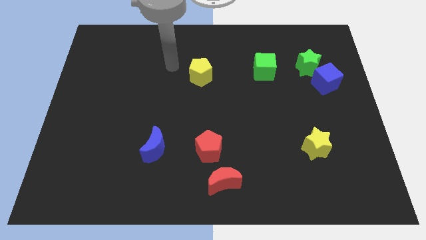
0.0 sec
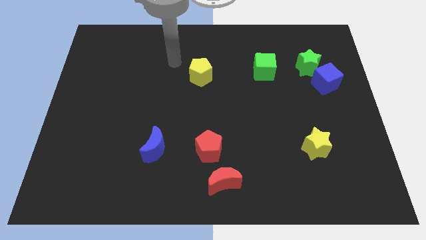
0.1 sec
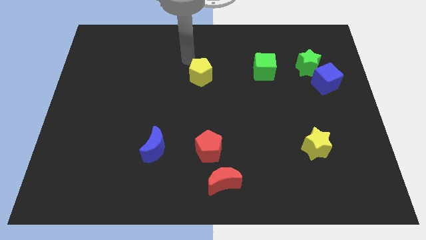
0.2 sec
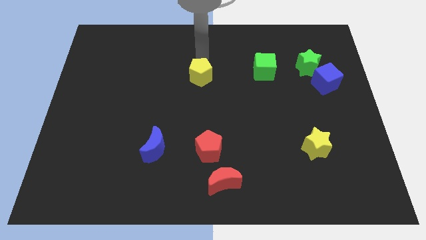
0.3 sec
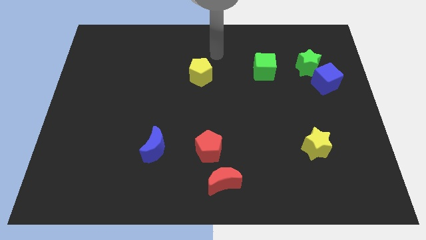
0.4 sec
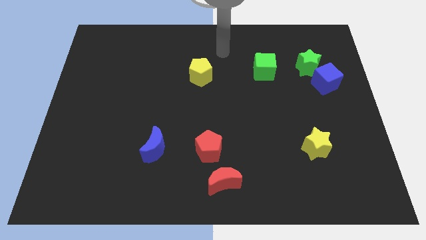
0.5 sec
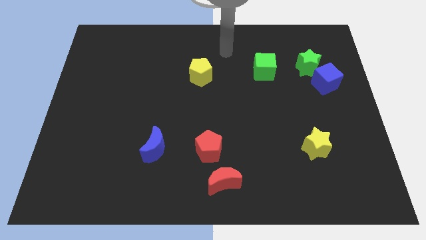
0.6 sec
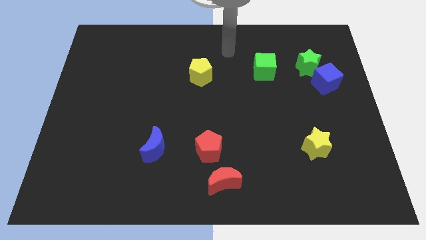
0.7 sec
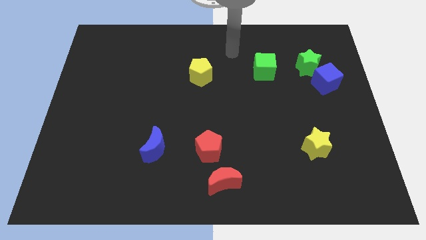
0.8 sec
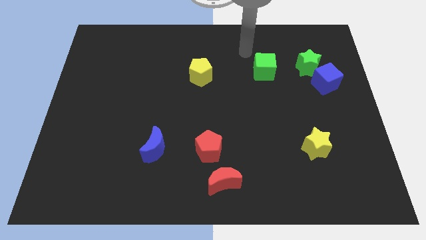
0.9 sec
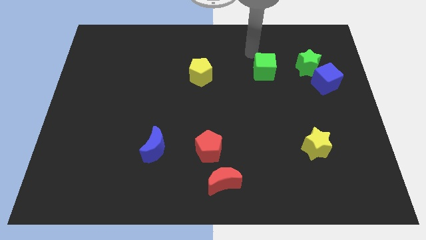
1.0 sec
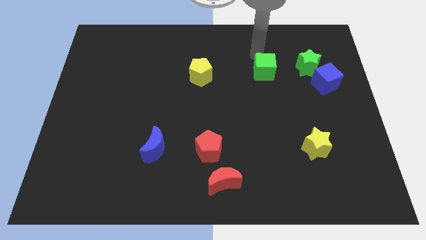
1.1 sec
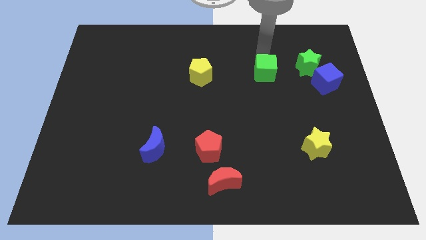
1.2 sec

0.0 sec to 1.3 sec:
point your hand at the top left side of the green cube

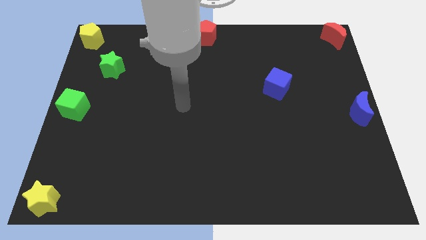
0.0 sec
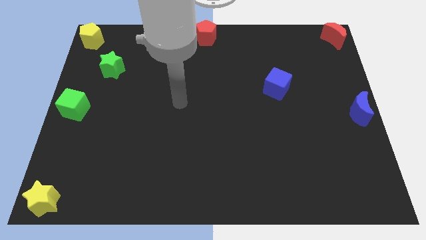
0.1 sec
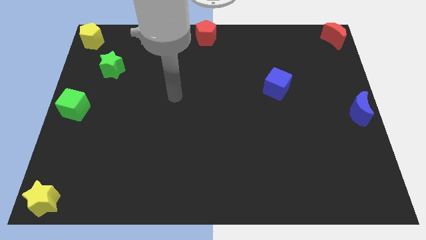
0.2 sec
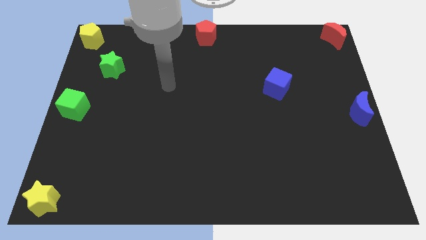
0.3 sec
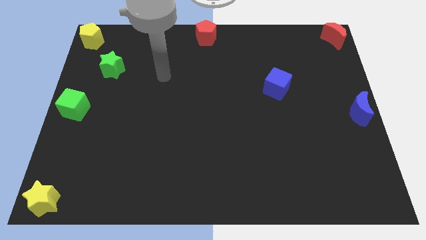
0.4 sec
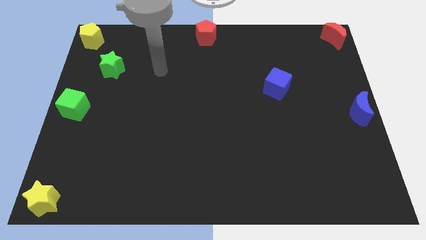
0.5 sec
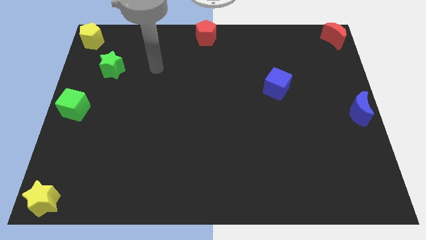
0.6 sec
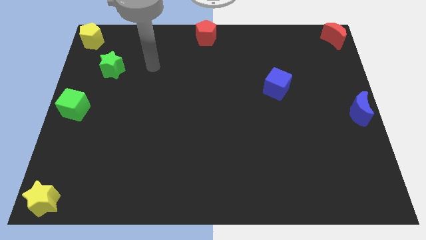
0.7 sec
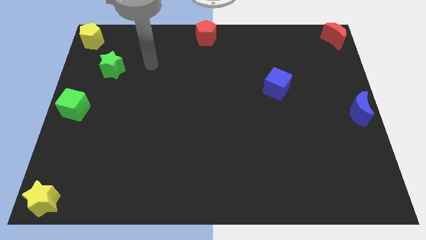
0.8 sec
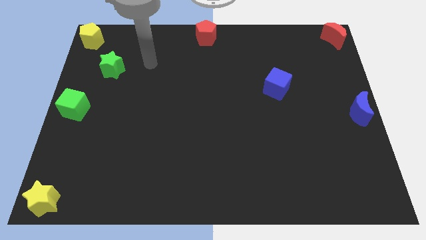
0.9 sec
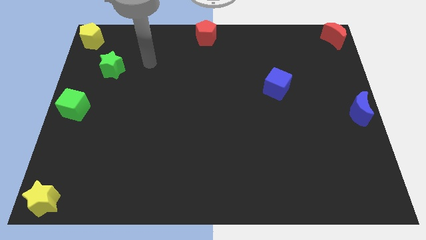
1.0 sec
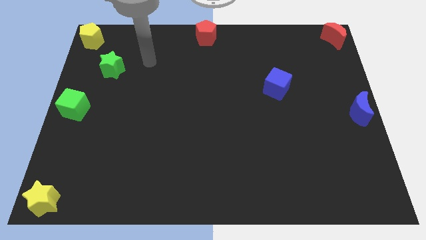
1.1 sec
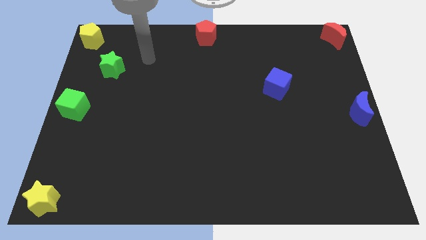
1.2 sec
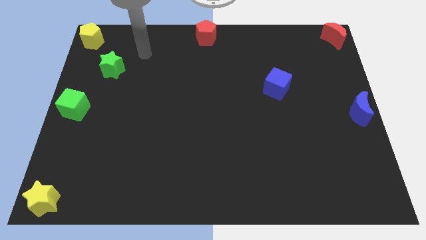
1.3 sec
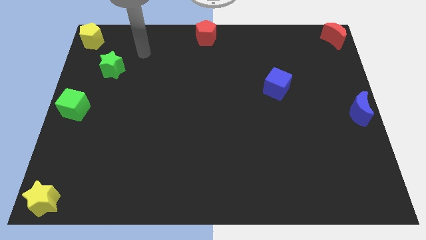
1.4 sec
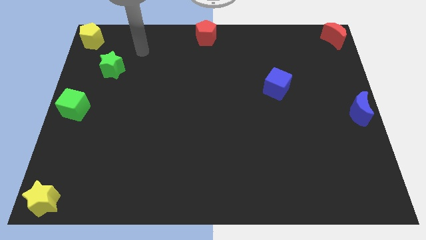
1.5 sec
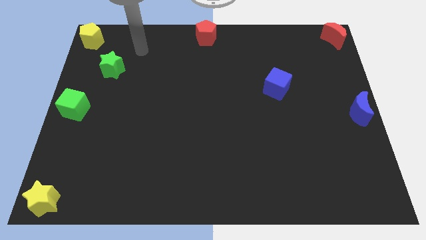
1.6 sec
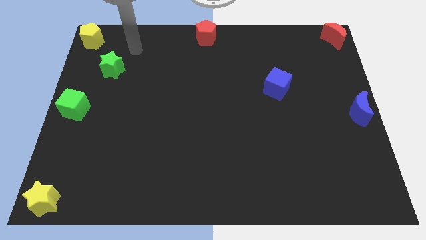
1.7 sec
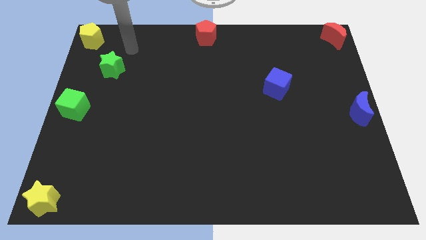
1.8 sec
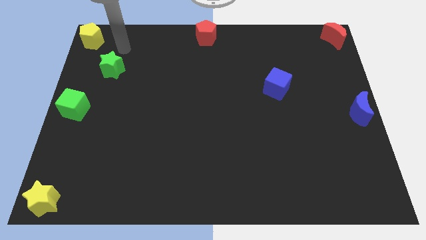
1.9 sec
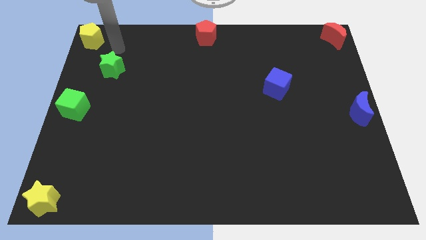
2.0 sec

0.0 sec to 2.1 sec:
move the arm towards the top of the green star

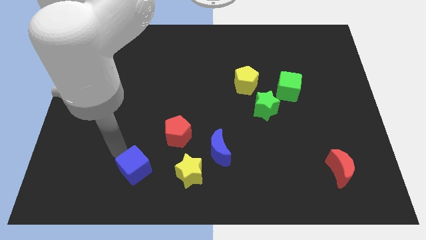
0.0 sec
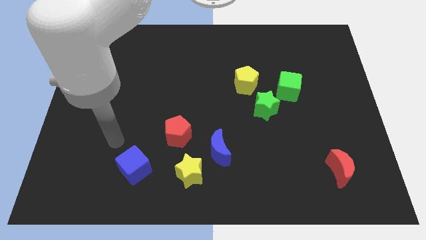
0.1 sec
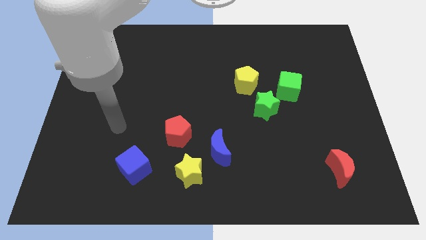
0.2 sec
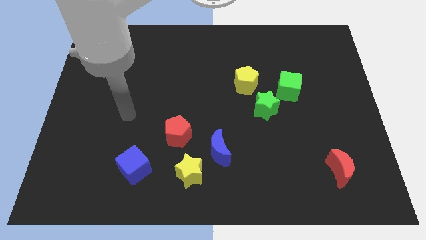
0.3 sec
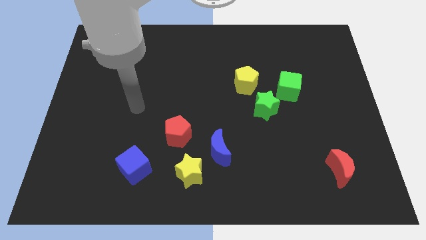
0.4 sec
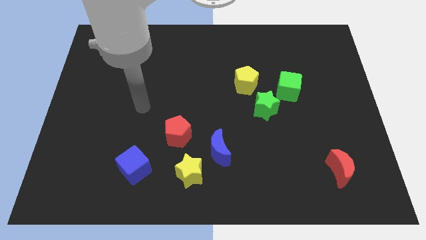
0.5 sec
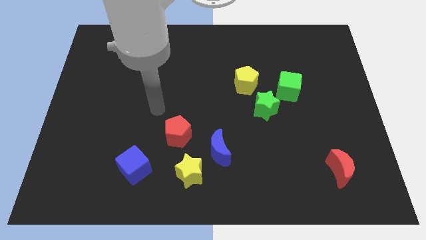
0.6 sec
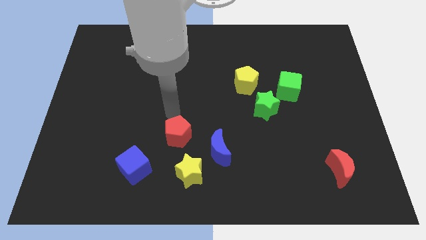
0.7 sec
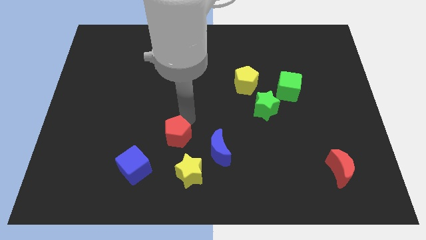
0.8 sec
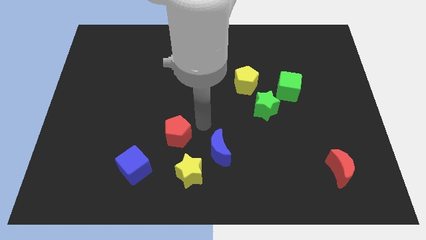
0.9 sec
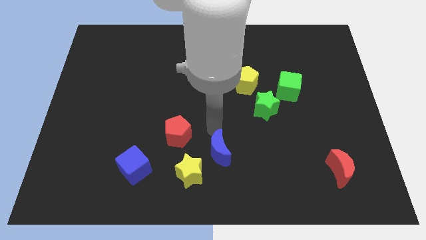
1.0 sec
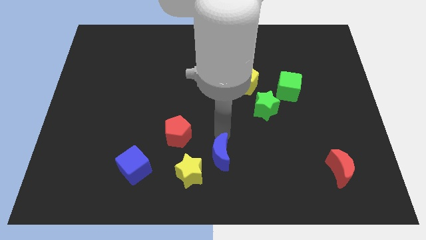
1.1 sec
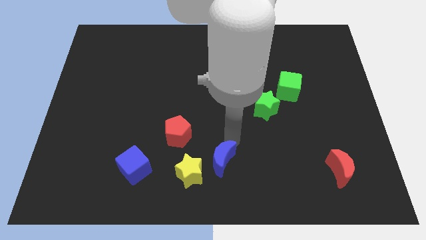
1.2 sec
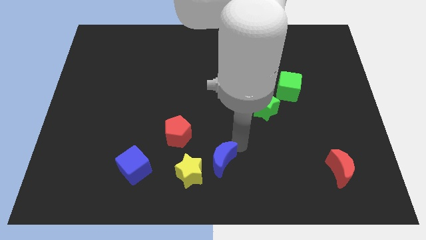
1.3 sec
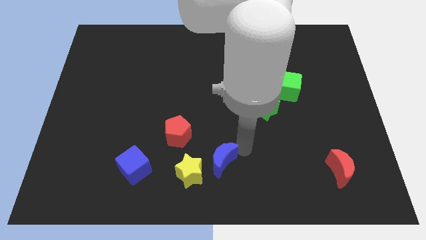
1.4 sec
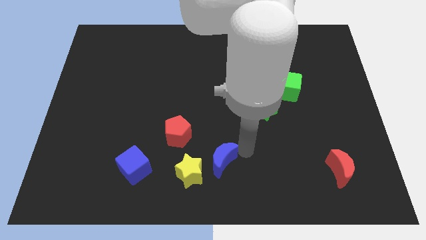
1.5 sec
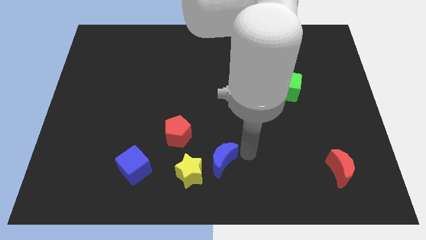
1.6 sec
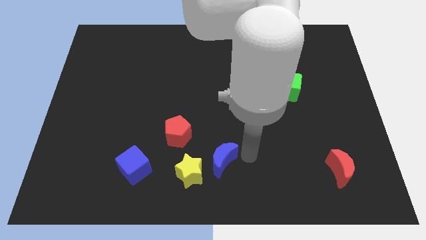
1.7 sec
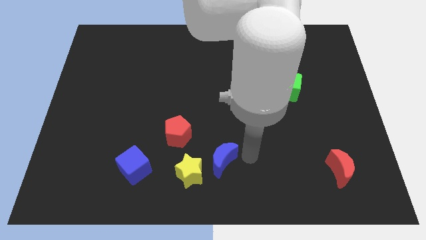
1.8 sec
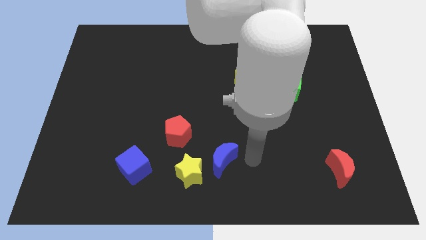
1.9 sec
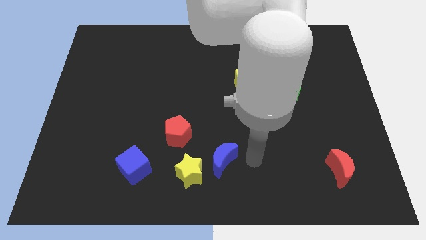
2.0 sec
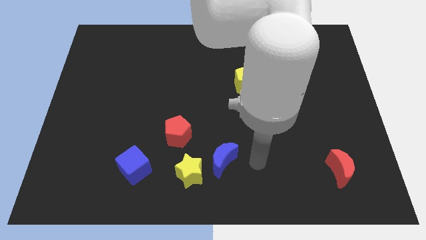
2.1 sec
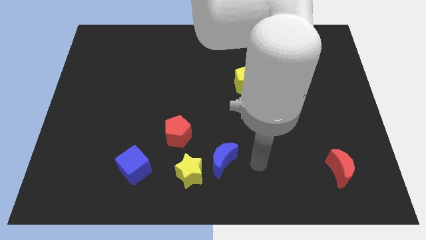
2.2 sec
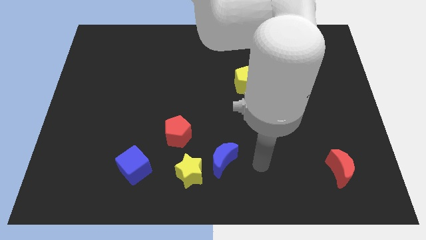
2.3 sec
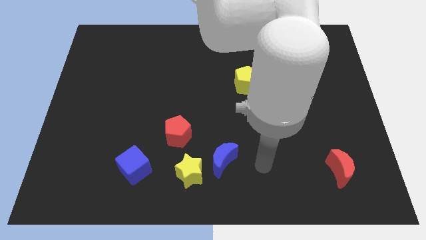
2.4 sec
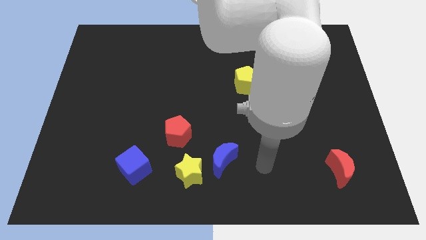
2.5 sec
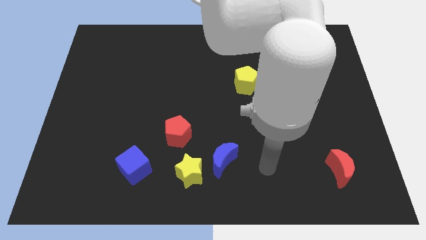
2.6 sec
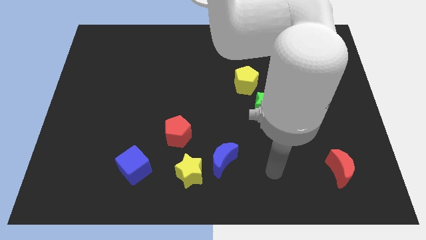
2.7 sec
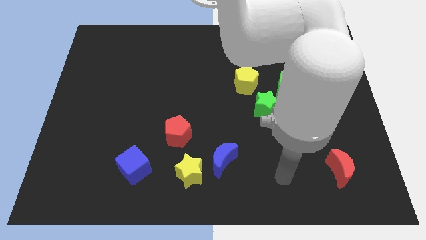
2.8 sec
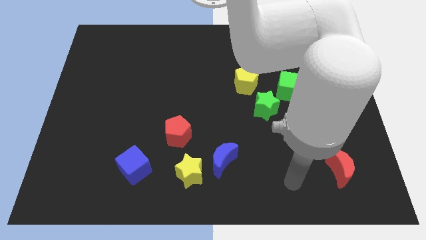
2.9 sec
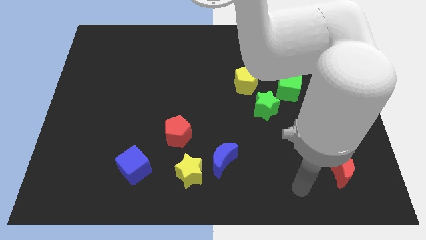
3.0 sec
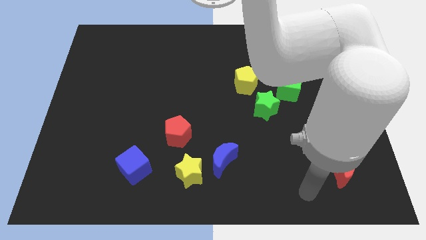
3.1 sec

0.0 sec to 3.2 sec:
slightly push the blue moon towards the bottom center of the board

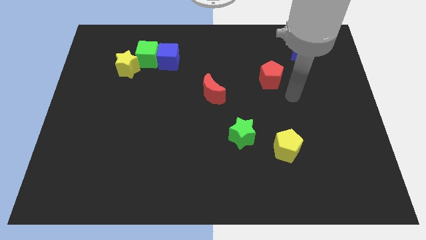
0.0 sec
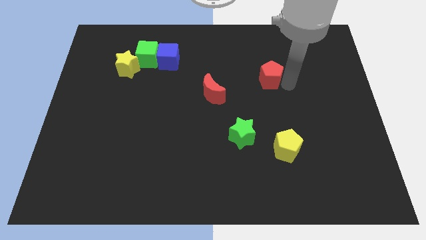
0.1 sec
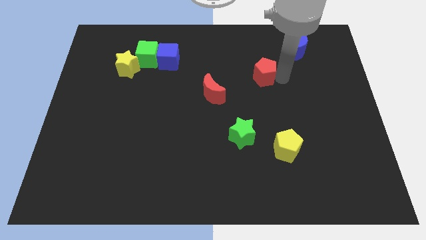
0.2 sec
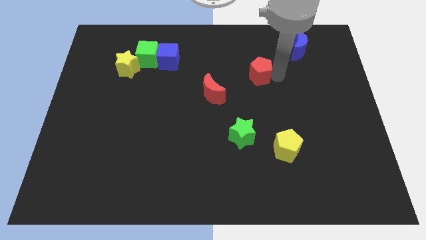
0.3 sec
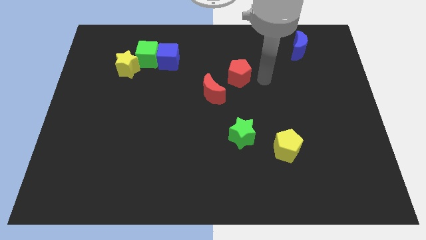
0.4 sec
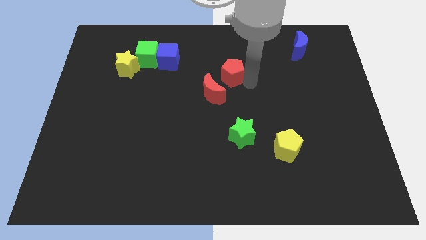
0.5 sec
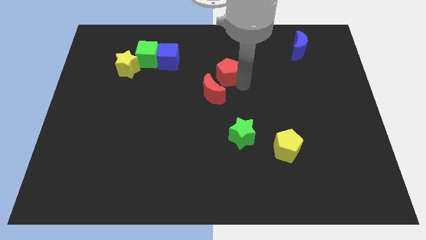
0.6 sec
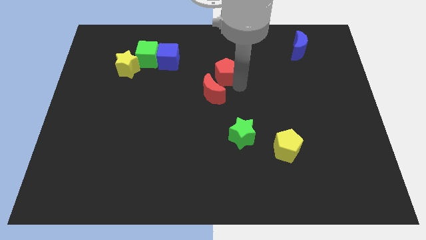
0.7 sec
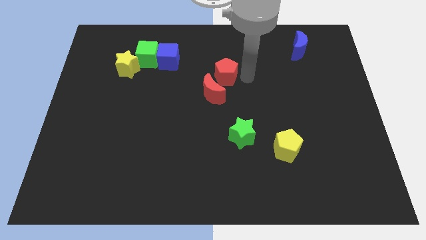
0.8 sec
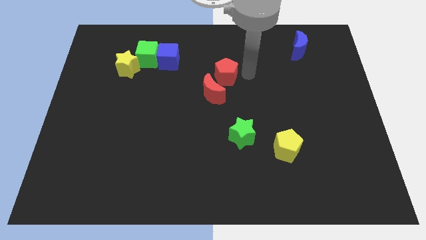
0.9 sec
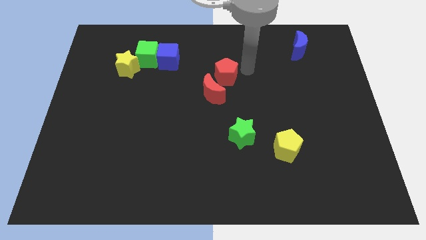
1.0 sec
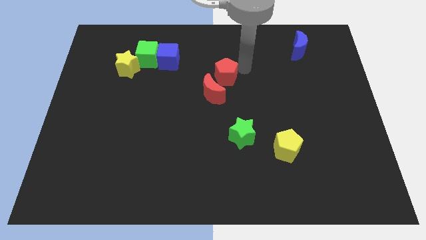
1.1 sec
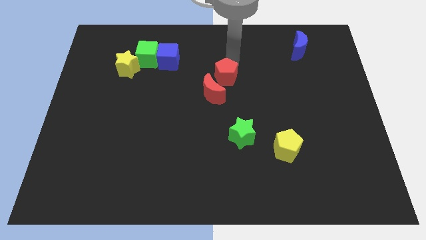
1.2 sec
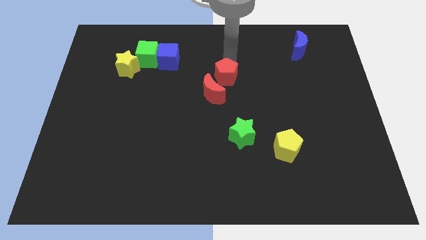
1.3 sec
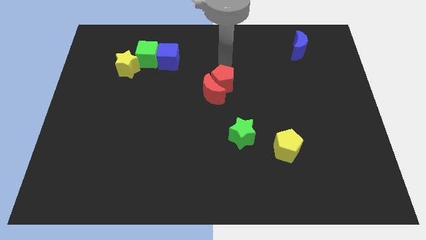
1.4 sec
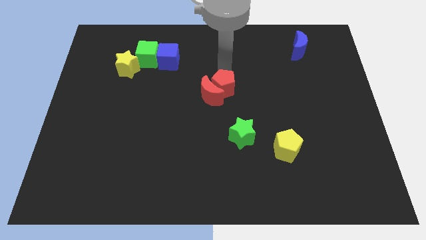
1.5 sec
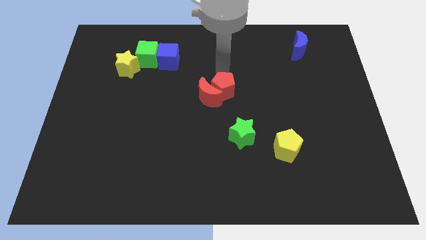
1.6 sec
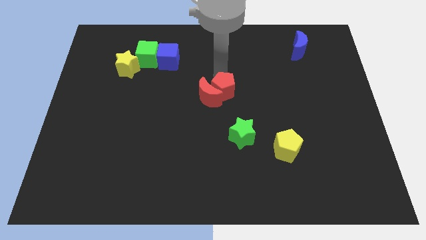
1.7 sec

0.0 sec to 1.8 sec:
move red pentagon into red moon

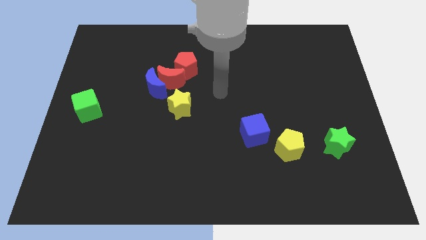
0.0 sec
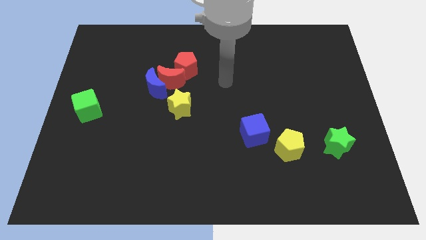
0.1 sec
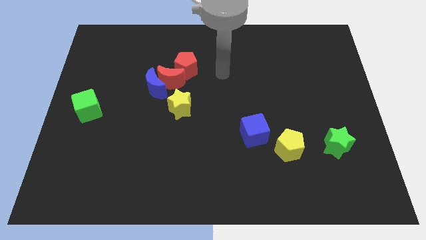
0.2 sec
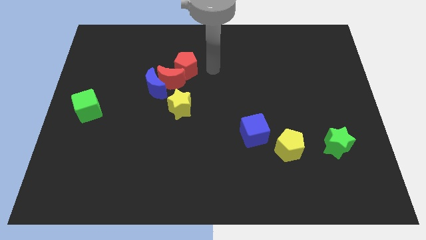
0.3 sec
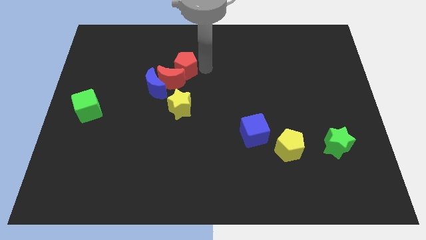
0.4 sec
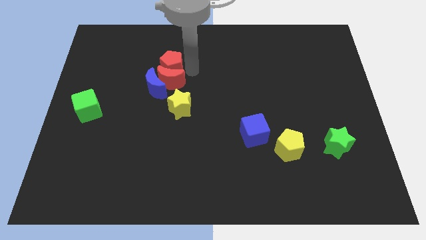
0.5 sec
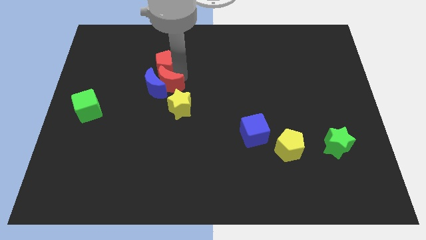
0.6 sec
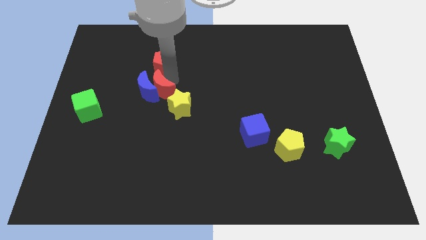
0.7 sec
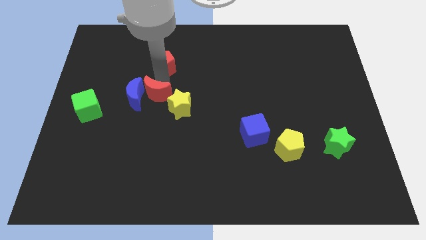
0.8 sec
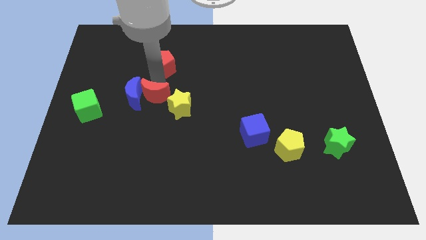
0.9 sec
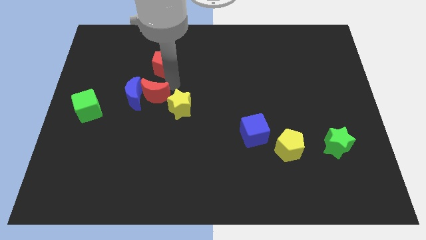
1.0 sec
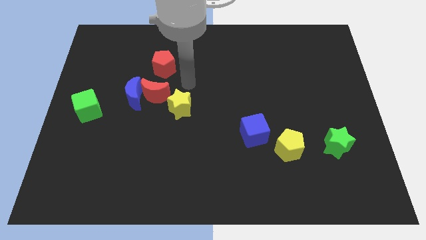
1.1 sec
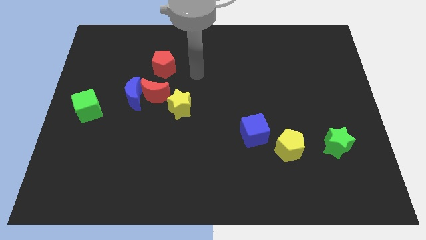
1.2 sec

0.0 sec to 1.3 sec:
push the red moon in the blue moon
